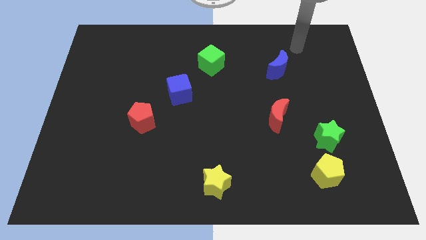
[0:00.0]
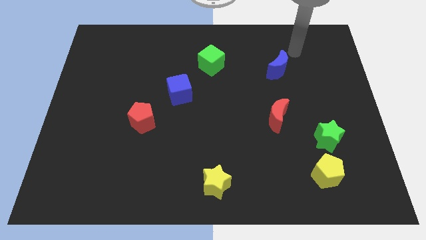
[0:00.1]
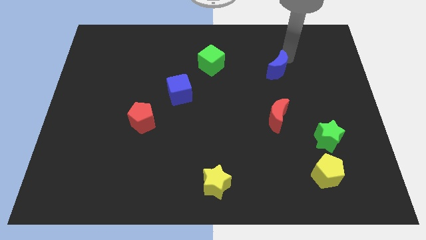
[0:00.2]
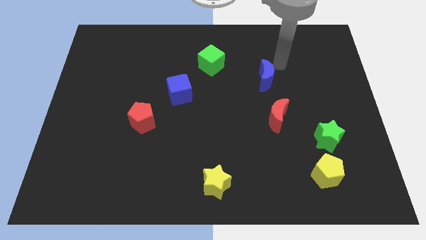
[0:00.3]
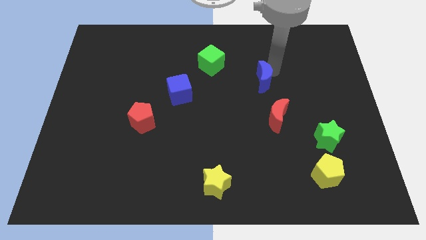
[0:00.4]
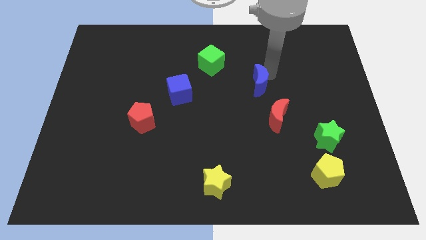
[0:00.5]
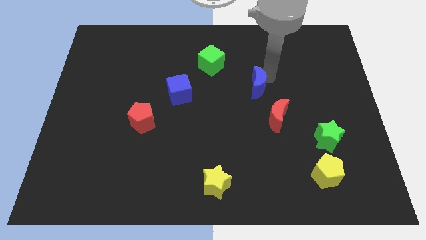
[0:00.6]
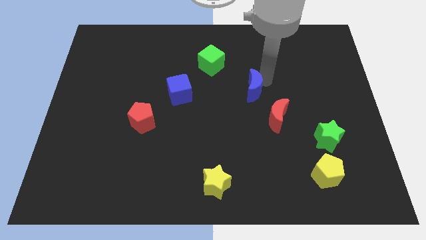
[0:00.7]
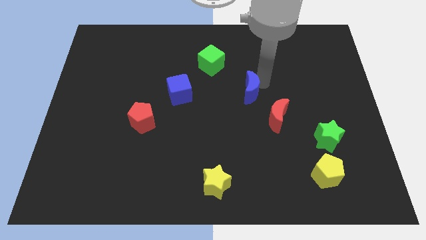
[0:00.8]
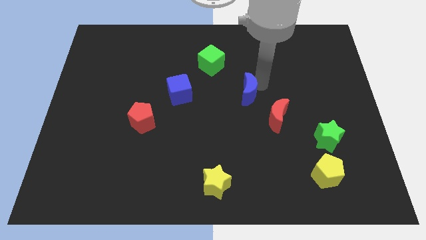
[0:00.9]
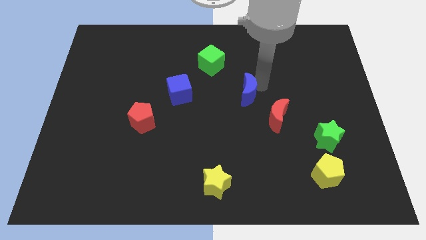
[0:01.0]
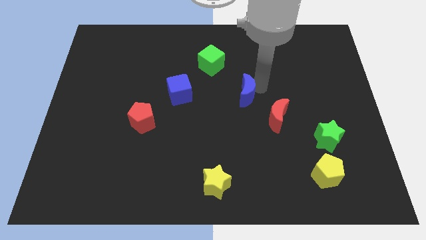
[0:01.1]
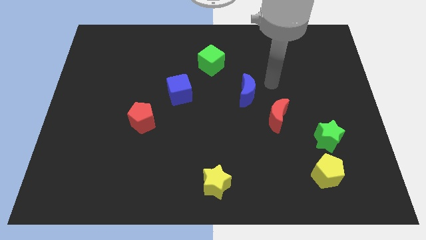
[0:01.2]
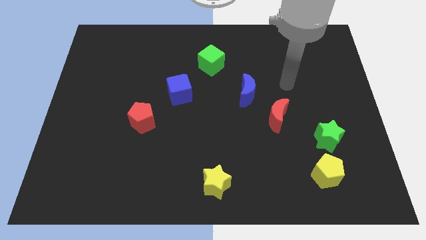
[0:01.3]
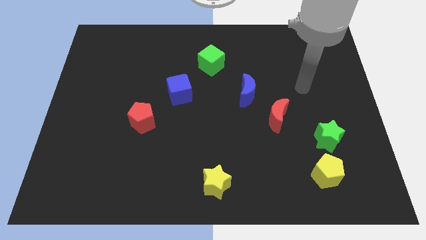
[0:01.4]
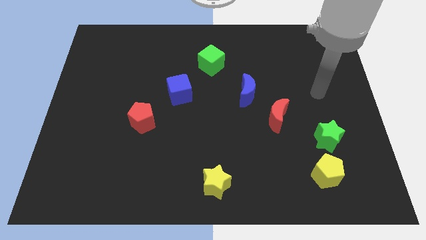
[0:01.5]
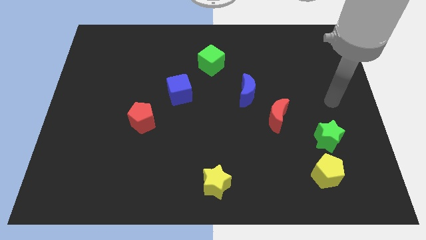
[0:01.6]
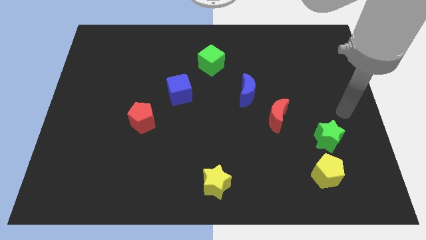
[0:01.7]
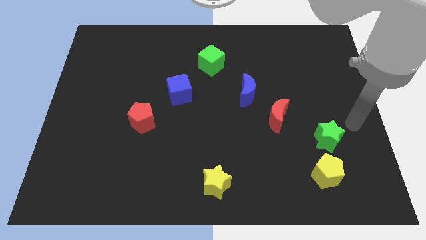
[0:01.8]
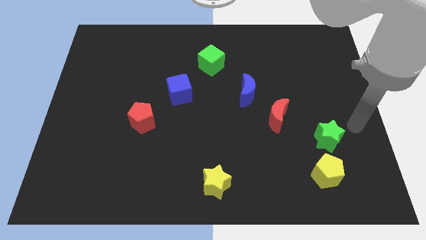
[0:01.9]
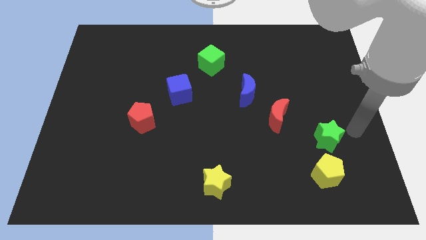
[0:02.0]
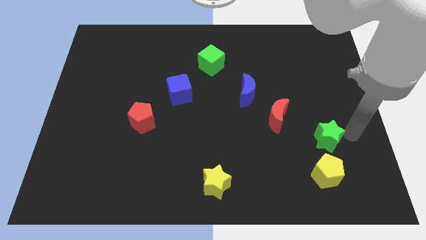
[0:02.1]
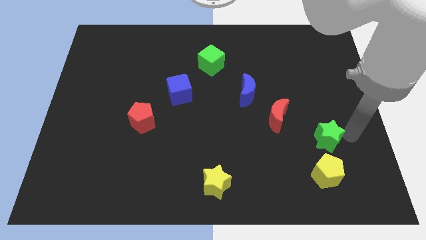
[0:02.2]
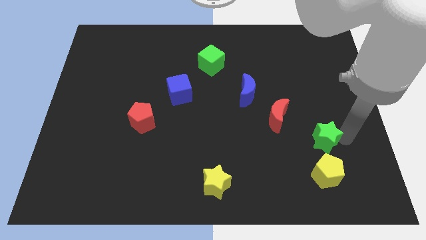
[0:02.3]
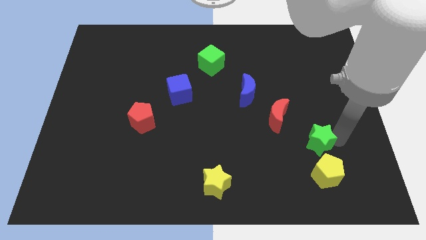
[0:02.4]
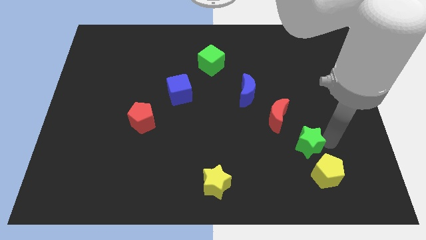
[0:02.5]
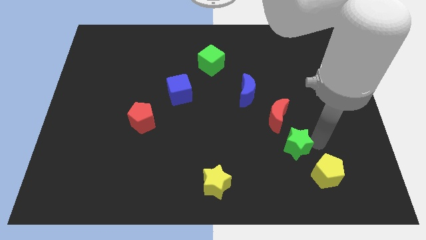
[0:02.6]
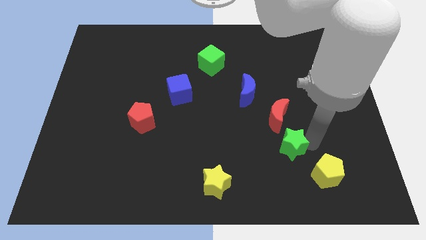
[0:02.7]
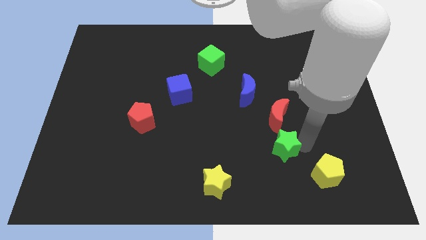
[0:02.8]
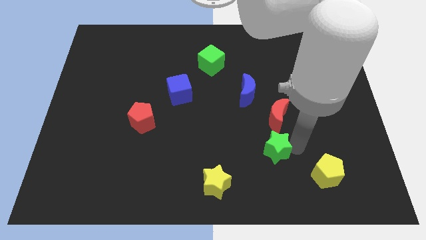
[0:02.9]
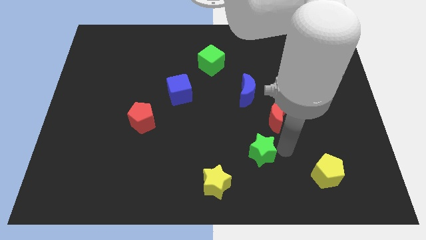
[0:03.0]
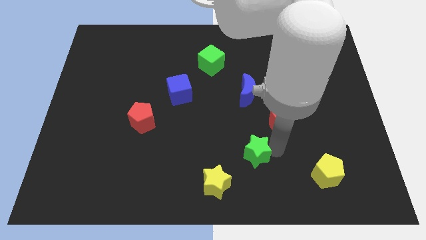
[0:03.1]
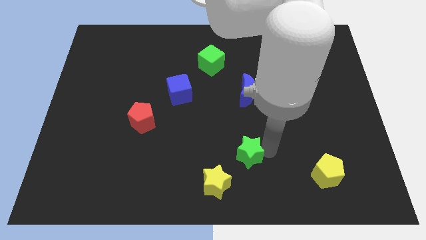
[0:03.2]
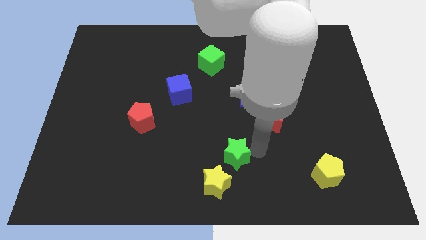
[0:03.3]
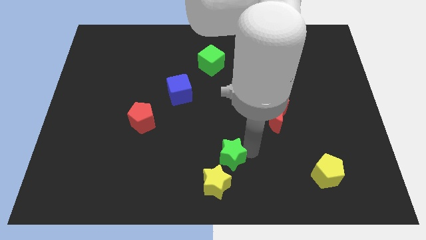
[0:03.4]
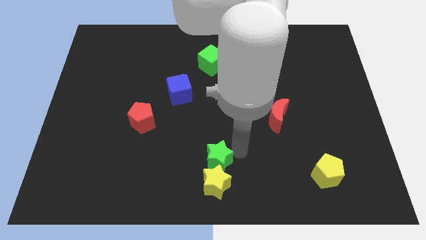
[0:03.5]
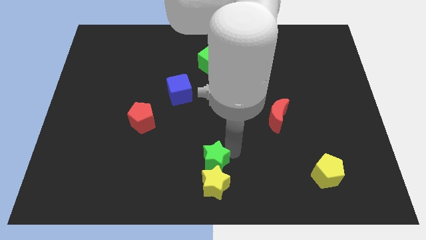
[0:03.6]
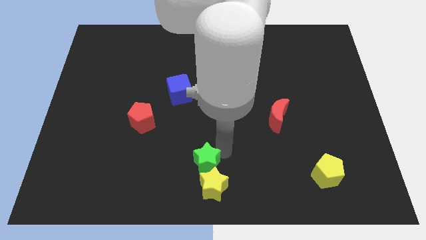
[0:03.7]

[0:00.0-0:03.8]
place the green star above the yellow star

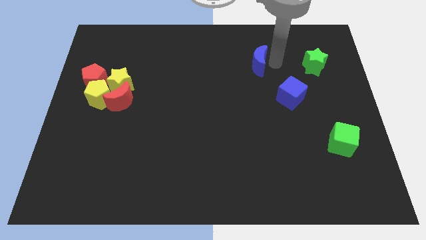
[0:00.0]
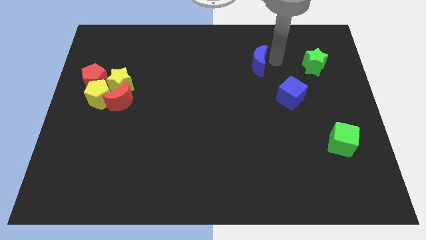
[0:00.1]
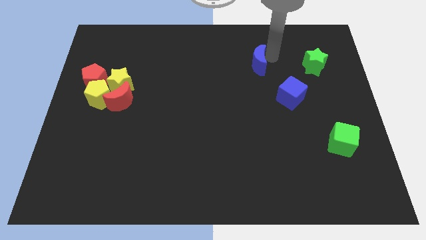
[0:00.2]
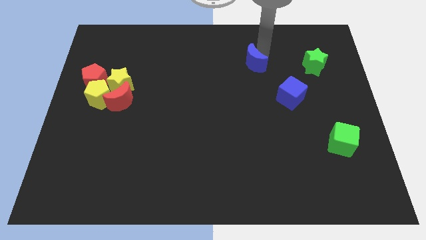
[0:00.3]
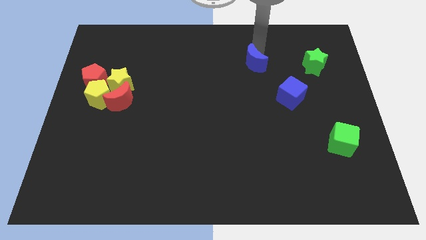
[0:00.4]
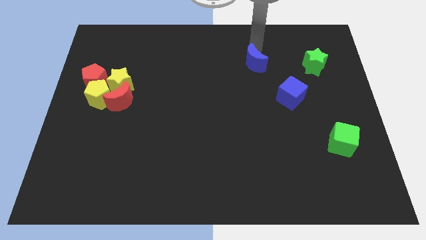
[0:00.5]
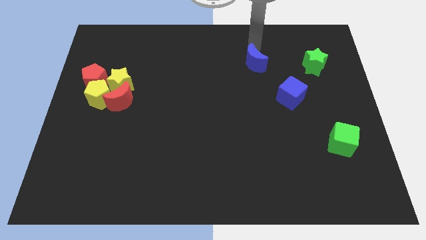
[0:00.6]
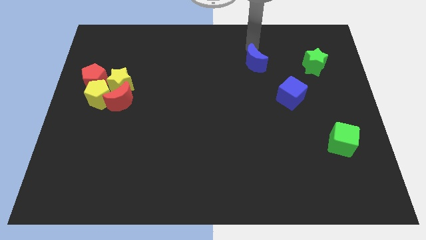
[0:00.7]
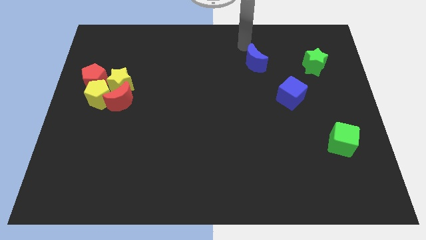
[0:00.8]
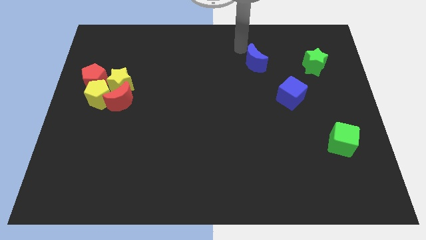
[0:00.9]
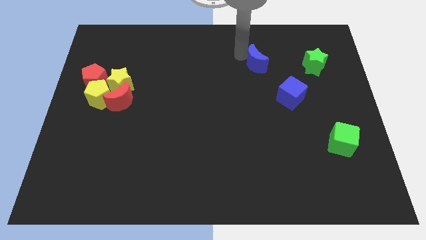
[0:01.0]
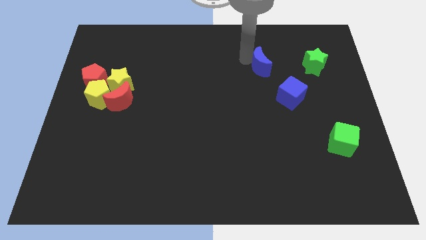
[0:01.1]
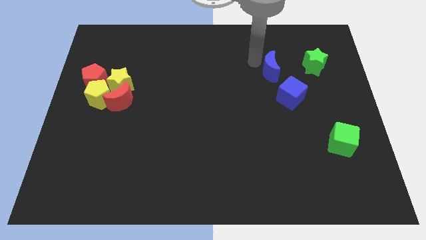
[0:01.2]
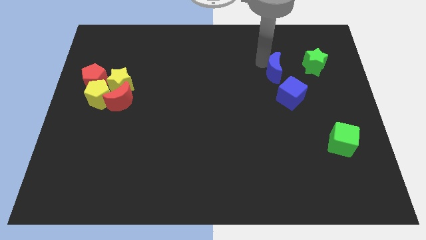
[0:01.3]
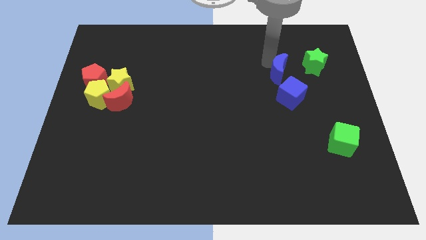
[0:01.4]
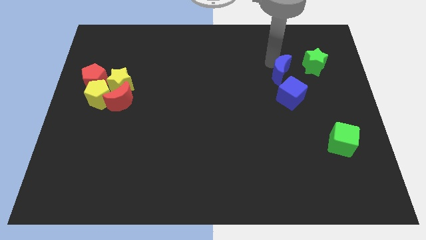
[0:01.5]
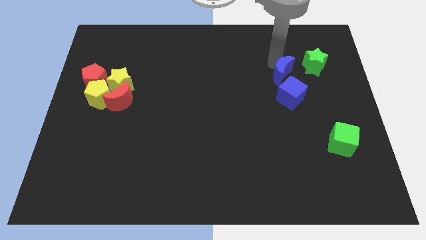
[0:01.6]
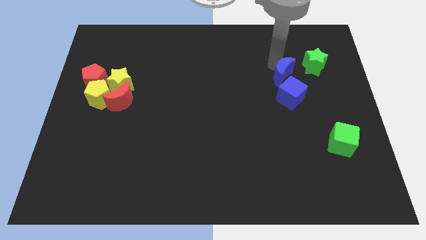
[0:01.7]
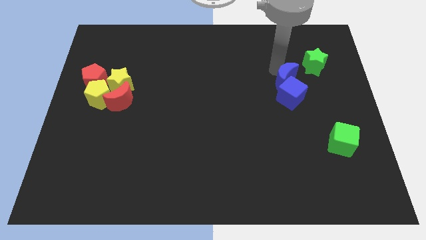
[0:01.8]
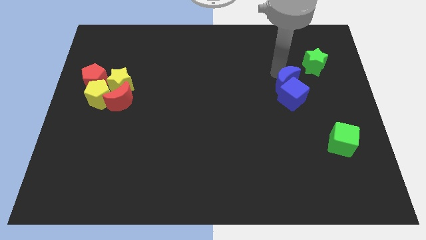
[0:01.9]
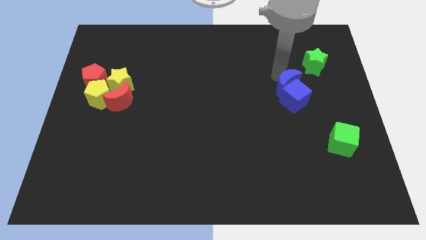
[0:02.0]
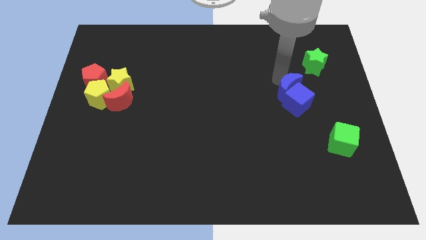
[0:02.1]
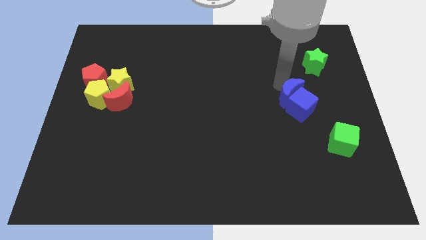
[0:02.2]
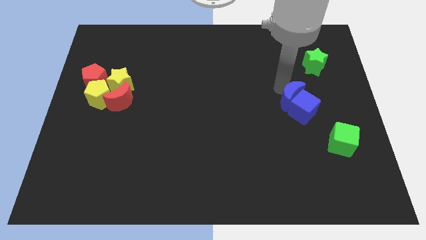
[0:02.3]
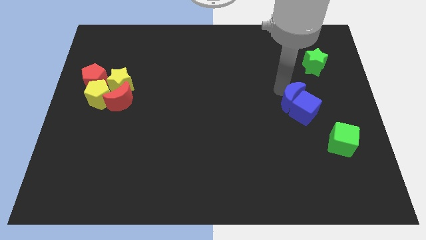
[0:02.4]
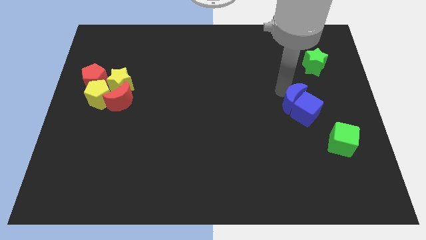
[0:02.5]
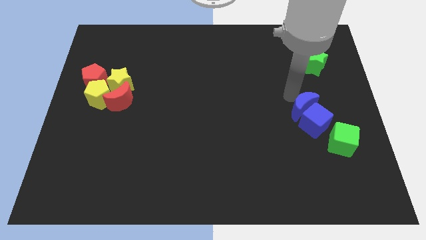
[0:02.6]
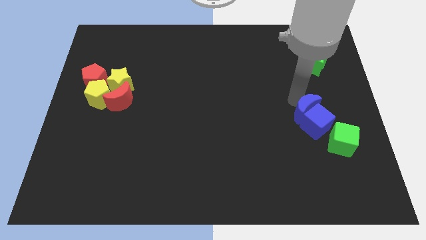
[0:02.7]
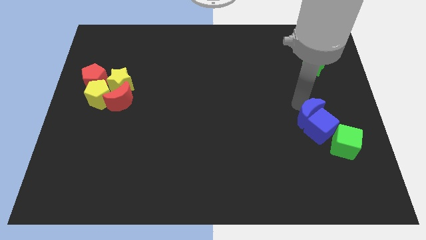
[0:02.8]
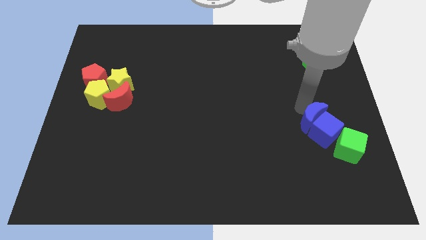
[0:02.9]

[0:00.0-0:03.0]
move the blue crescent and the blue cube towards the green cube

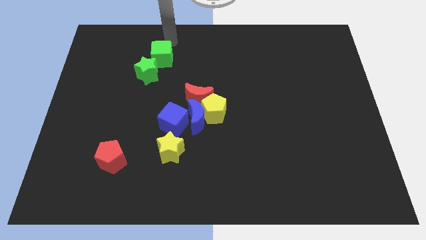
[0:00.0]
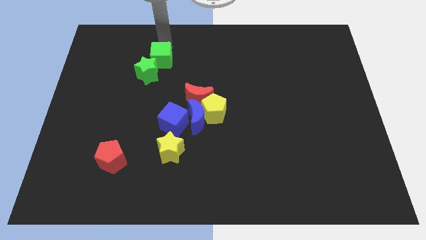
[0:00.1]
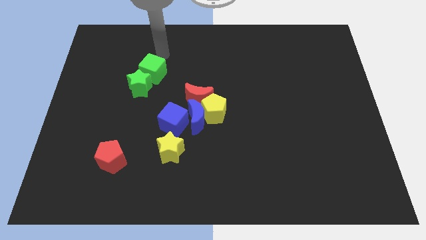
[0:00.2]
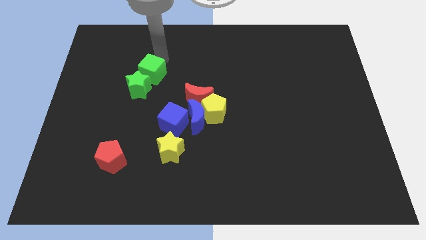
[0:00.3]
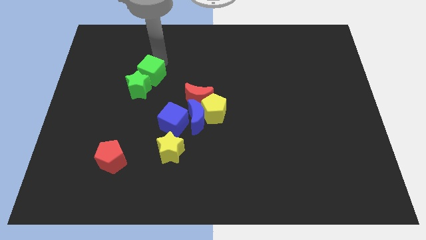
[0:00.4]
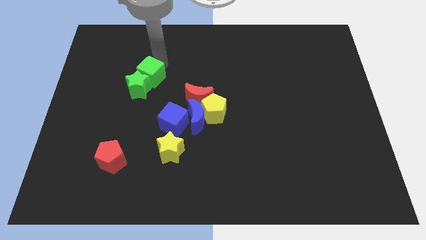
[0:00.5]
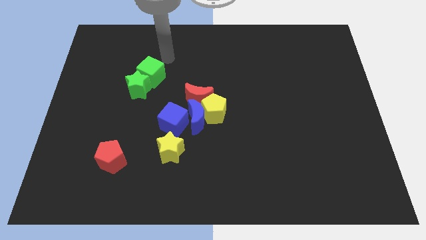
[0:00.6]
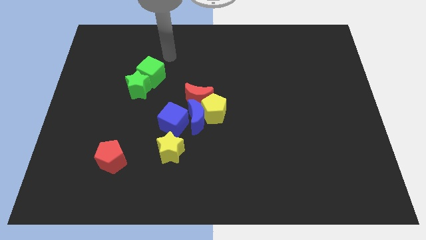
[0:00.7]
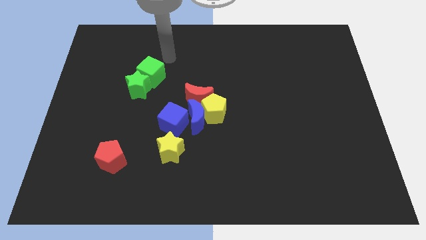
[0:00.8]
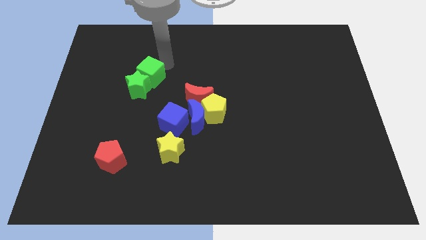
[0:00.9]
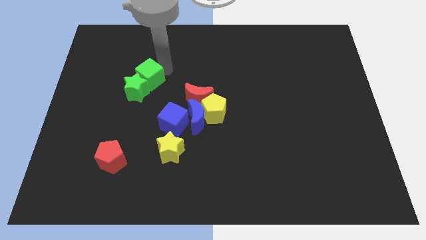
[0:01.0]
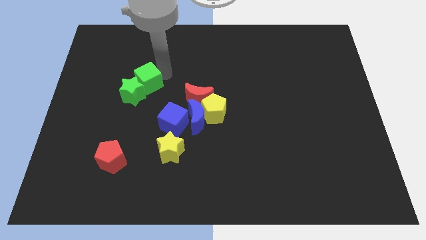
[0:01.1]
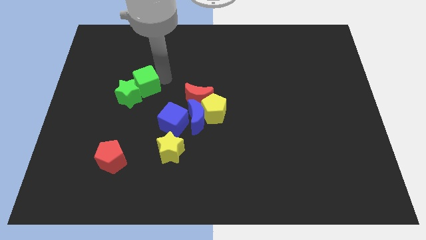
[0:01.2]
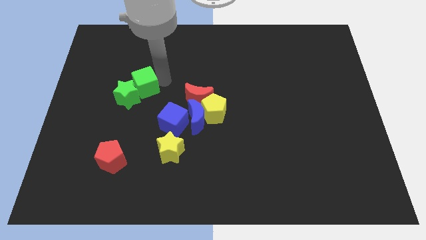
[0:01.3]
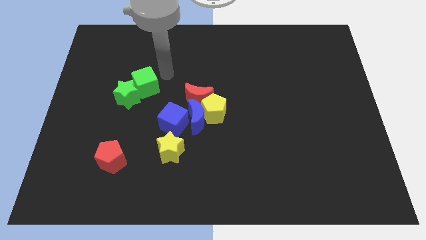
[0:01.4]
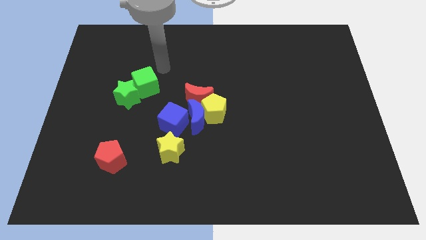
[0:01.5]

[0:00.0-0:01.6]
push the green cube towards the green star

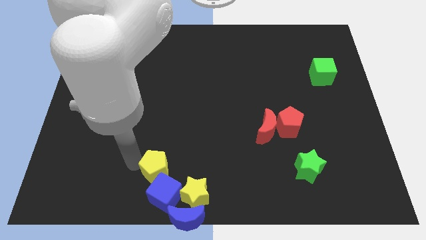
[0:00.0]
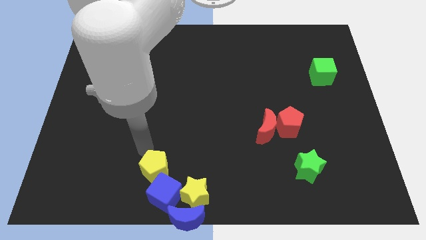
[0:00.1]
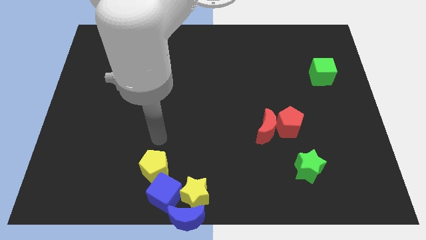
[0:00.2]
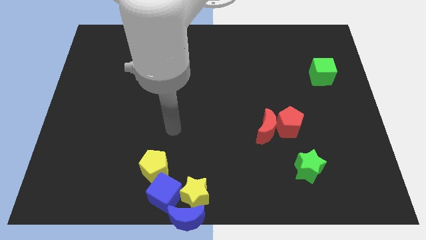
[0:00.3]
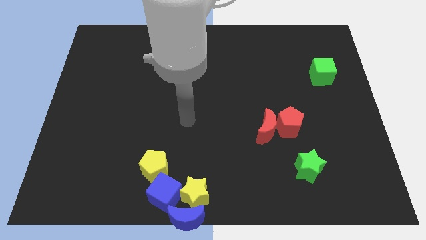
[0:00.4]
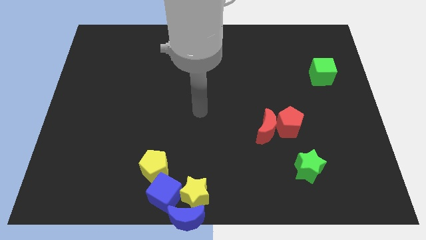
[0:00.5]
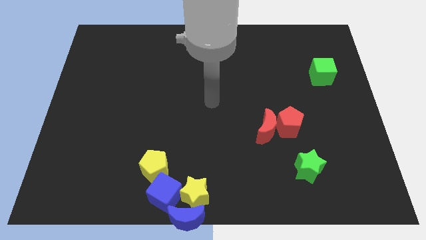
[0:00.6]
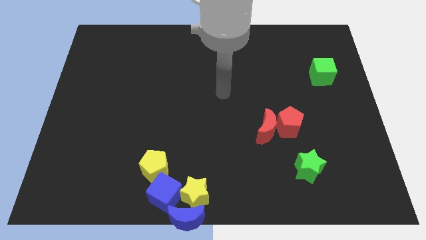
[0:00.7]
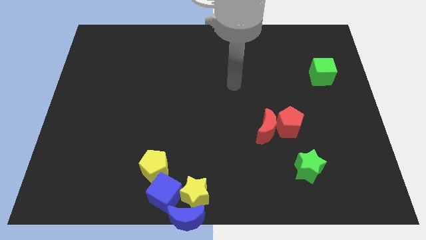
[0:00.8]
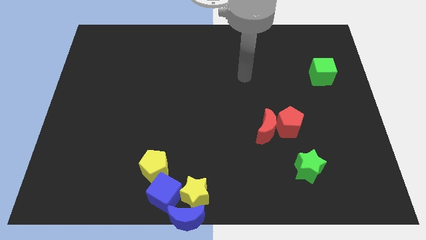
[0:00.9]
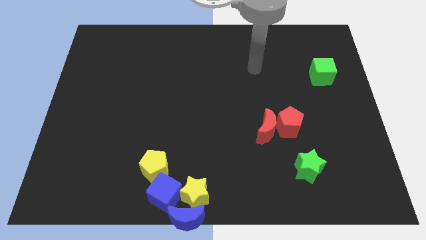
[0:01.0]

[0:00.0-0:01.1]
move the arm away from the yellow pentagon
